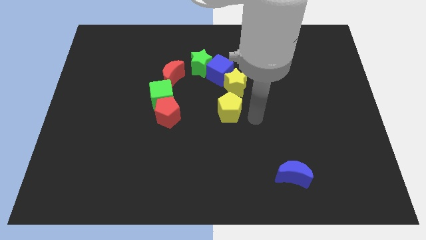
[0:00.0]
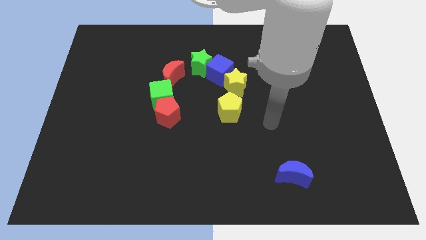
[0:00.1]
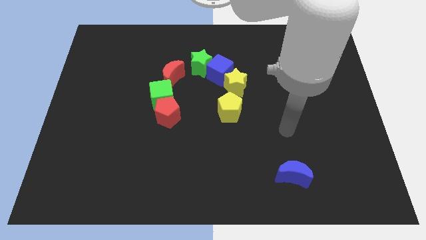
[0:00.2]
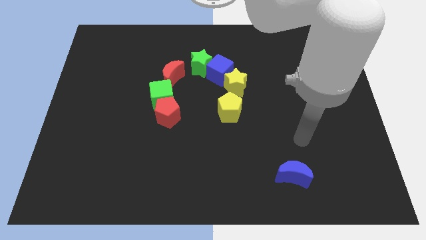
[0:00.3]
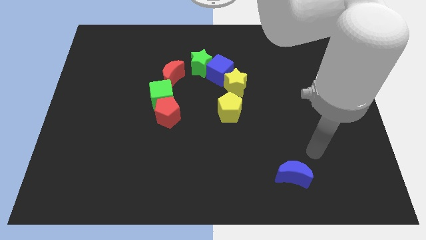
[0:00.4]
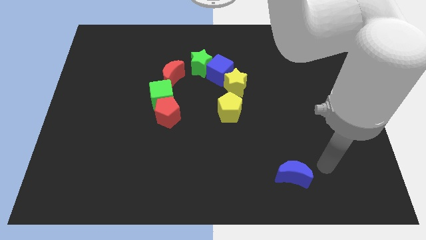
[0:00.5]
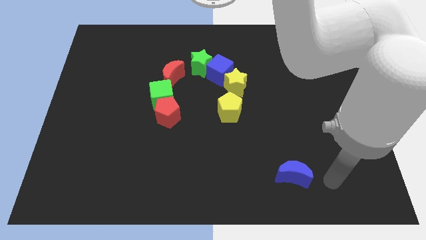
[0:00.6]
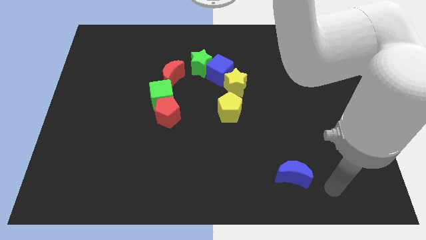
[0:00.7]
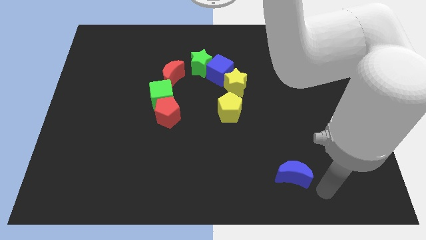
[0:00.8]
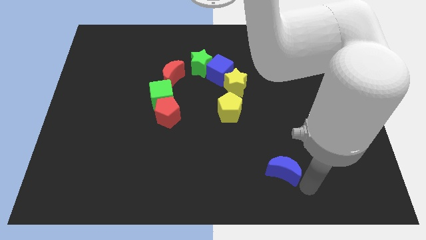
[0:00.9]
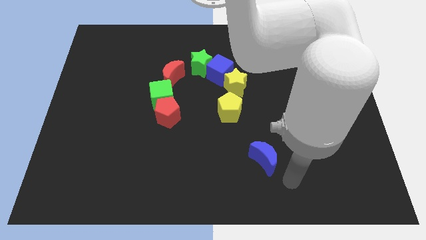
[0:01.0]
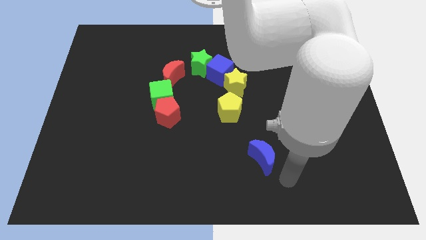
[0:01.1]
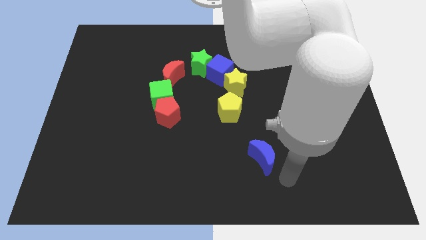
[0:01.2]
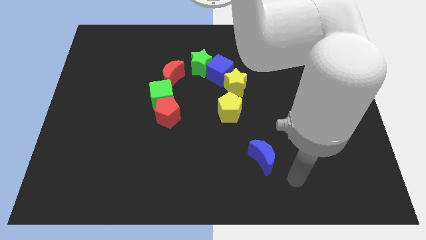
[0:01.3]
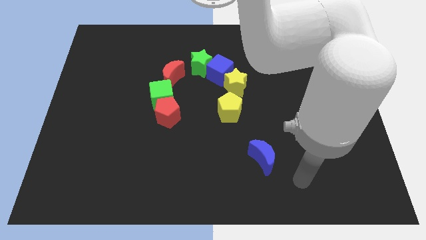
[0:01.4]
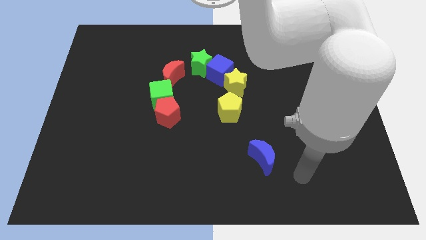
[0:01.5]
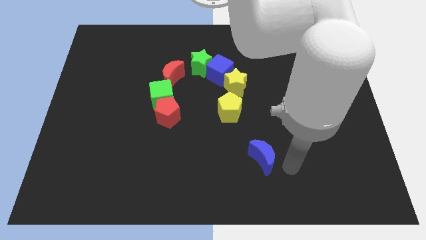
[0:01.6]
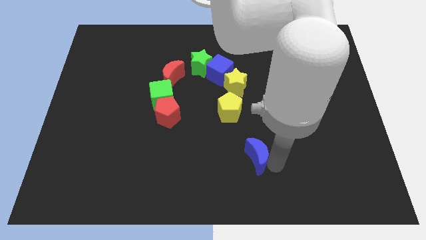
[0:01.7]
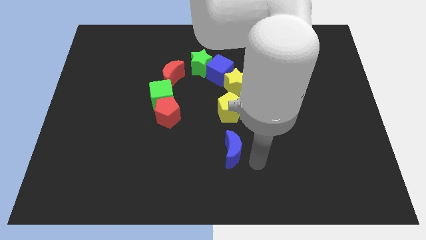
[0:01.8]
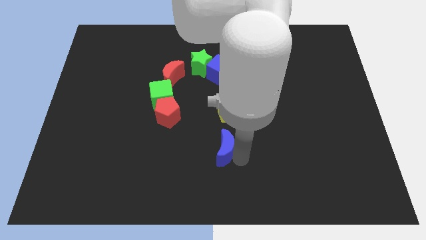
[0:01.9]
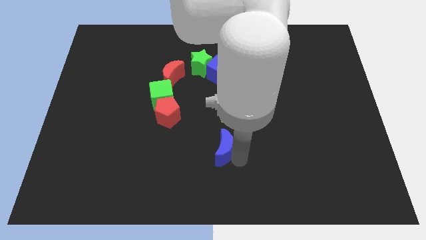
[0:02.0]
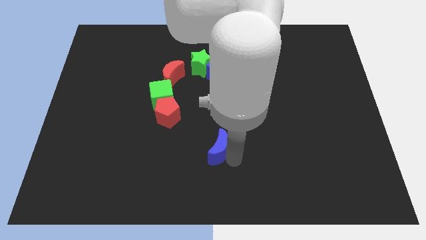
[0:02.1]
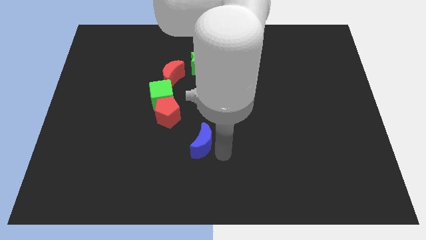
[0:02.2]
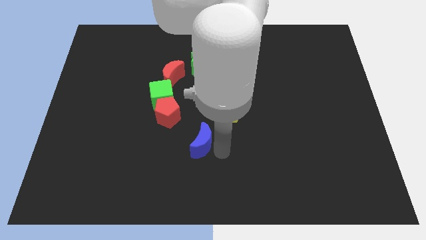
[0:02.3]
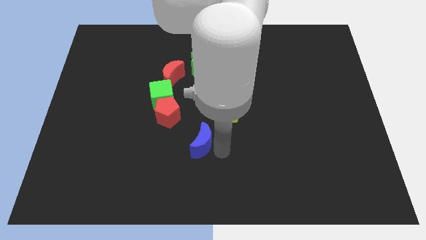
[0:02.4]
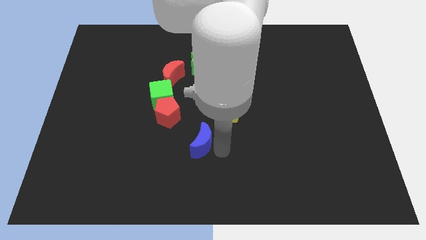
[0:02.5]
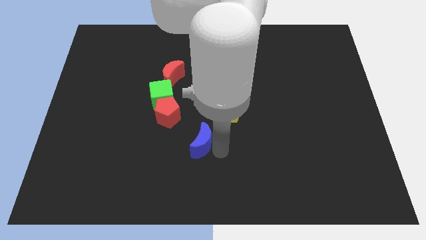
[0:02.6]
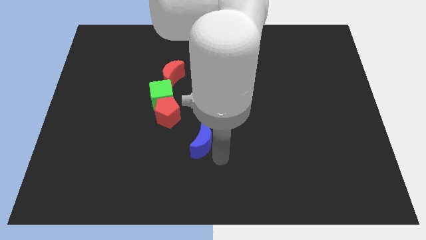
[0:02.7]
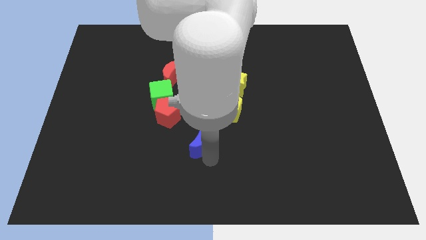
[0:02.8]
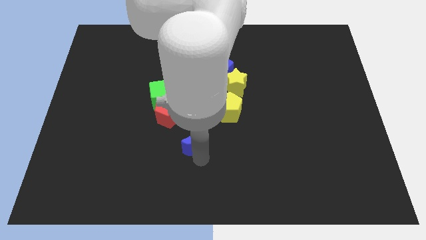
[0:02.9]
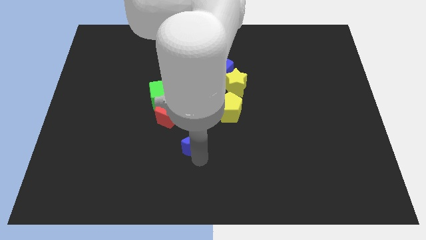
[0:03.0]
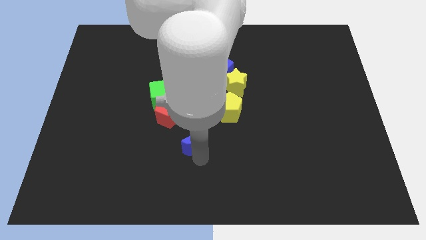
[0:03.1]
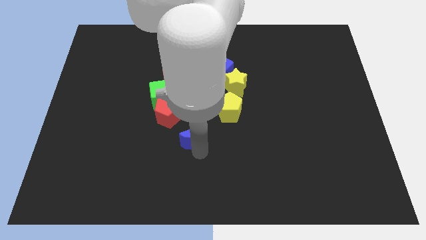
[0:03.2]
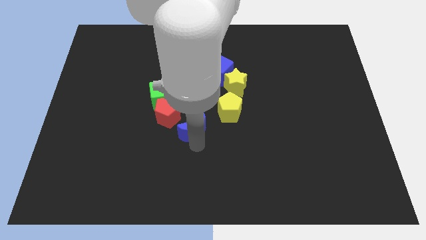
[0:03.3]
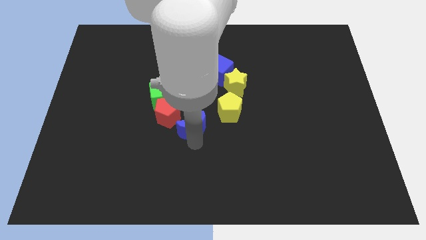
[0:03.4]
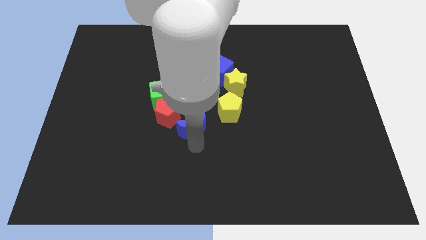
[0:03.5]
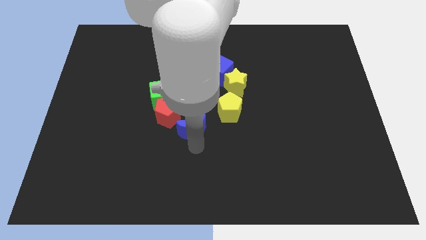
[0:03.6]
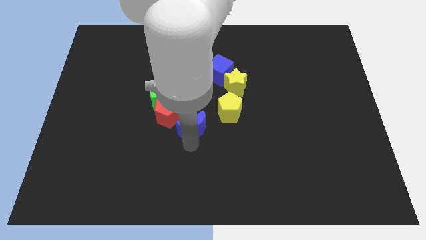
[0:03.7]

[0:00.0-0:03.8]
push the blue crescent to the right of the red pentagon

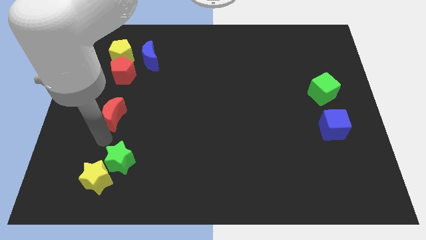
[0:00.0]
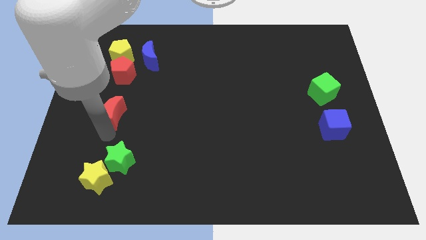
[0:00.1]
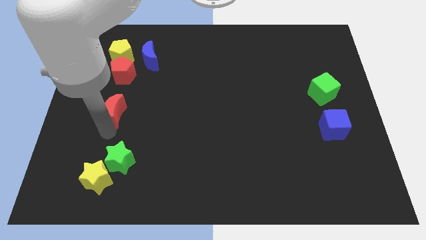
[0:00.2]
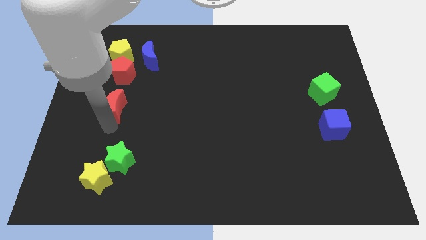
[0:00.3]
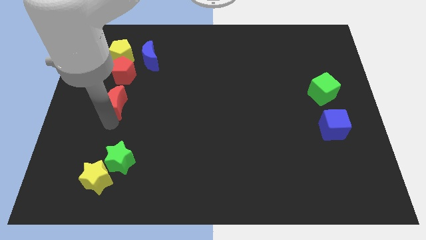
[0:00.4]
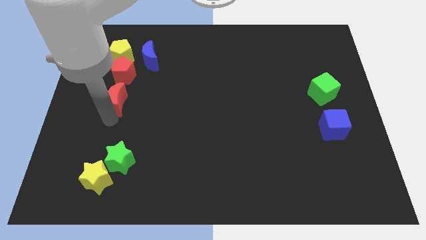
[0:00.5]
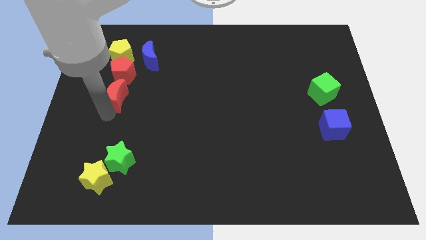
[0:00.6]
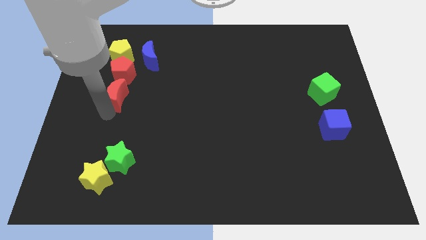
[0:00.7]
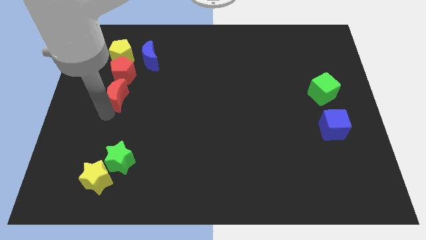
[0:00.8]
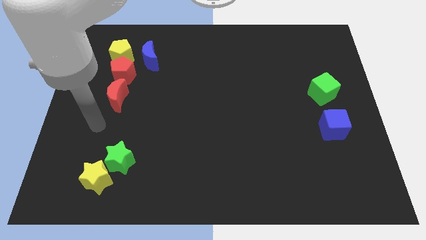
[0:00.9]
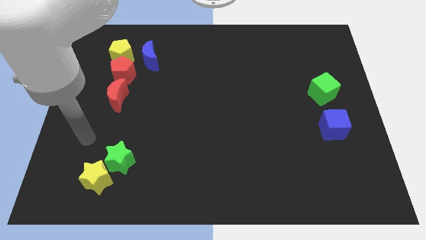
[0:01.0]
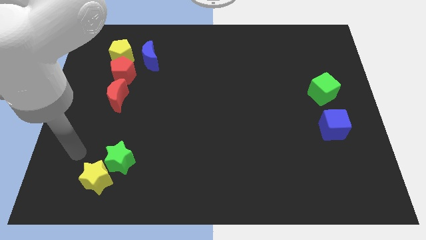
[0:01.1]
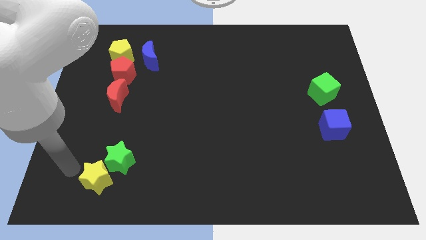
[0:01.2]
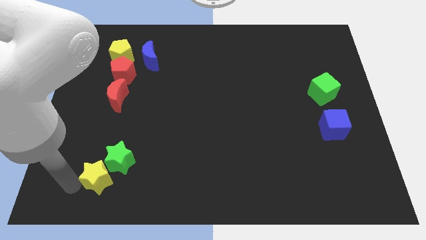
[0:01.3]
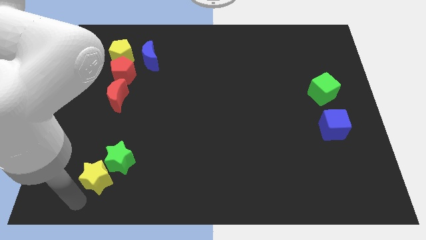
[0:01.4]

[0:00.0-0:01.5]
place red moon below the red pentagon

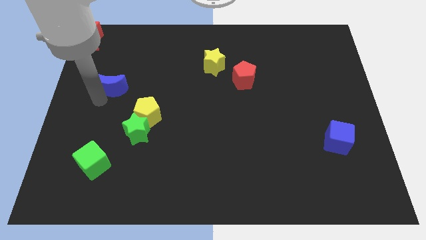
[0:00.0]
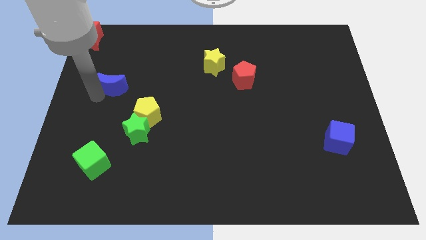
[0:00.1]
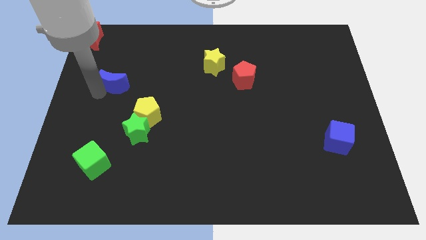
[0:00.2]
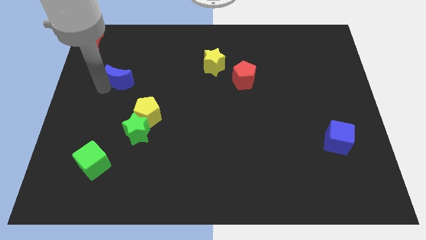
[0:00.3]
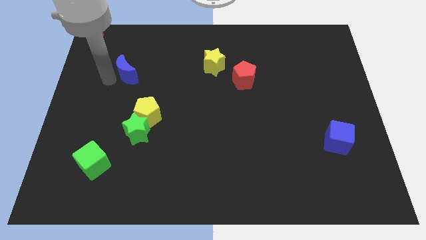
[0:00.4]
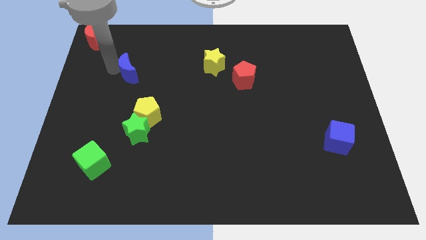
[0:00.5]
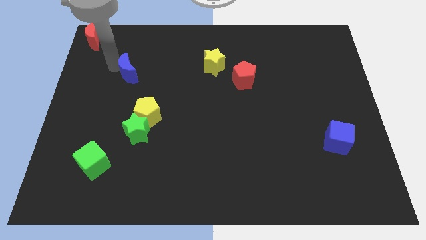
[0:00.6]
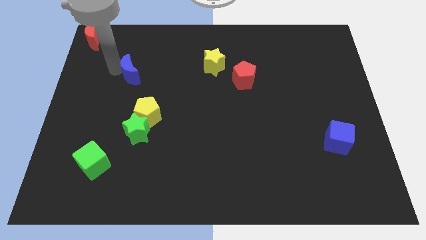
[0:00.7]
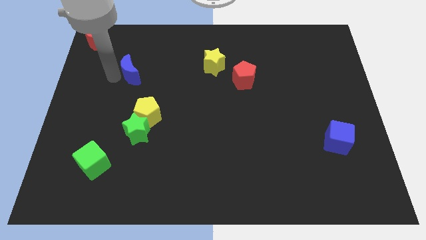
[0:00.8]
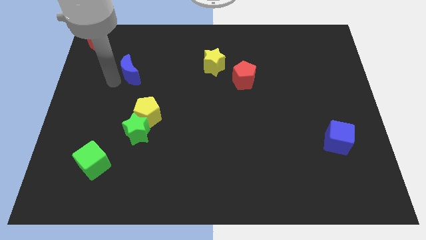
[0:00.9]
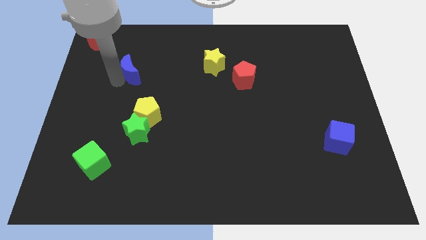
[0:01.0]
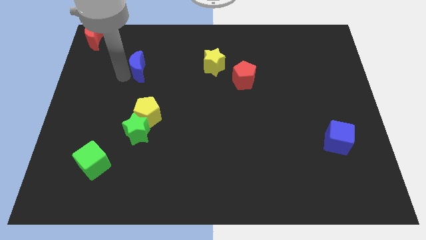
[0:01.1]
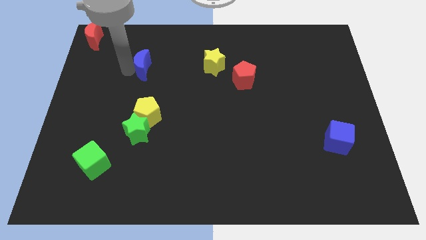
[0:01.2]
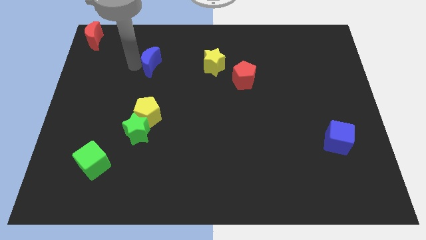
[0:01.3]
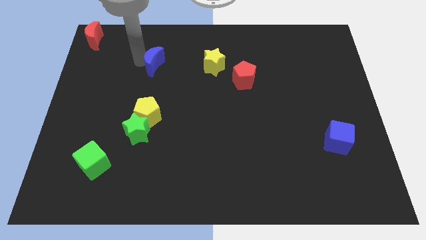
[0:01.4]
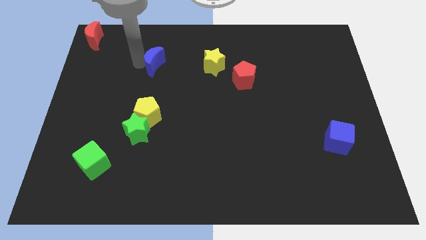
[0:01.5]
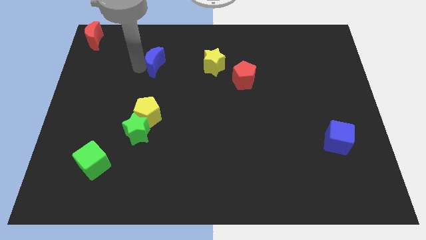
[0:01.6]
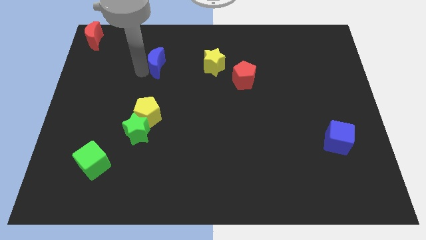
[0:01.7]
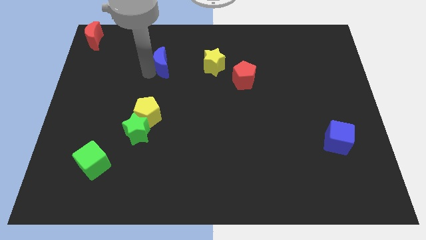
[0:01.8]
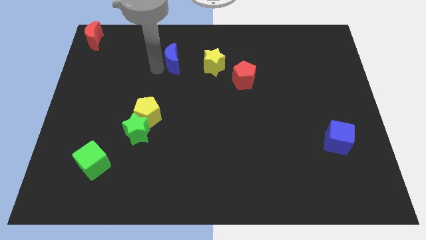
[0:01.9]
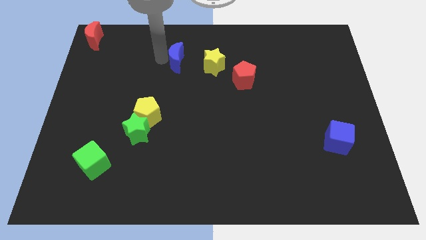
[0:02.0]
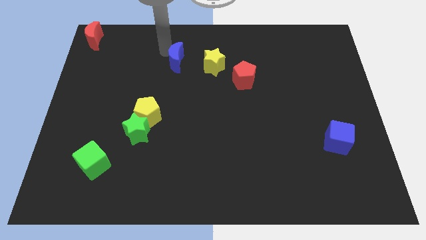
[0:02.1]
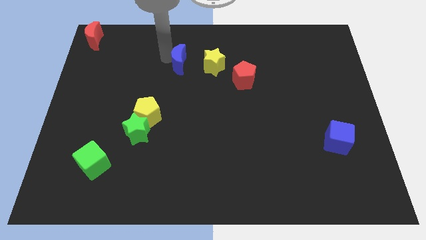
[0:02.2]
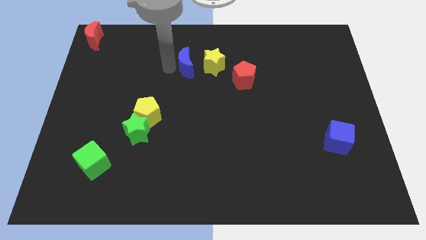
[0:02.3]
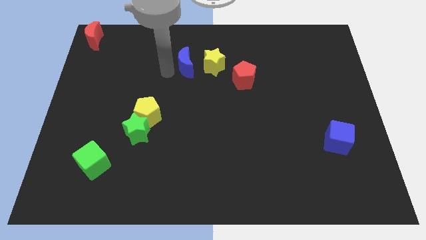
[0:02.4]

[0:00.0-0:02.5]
move the blue crescent to the left side of the yellow star

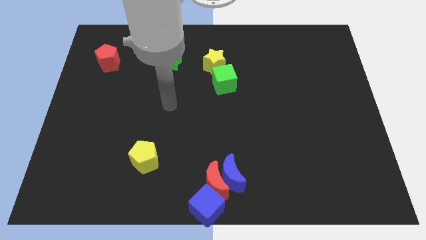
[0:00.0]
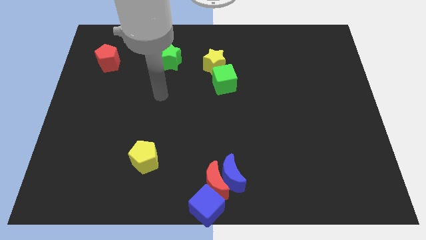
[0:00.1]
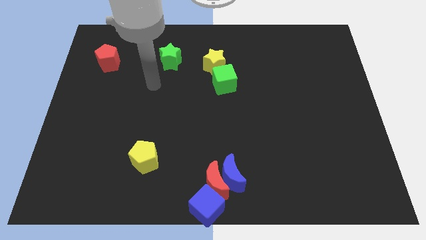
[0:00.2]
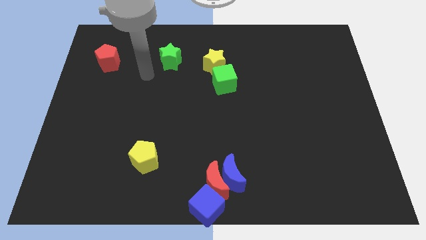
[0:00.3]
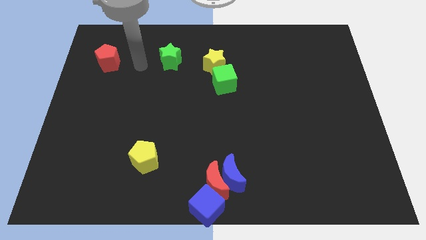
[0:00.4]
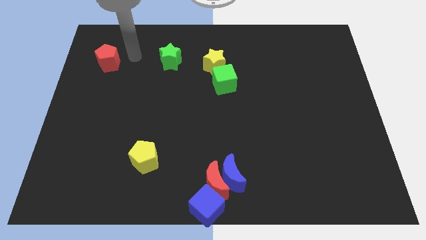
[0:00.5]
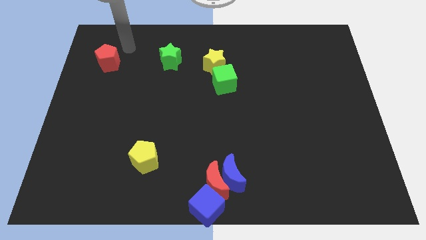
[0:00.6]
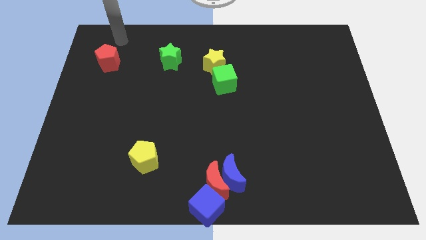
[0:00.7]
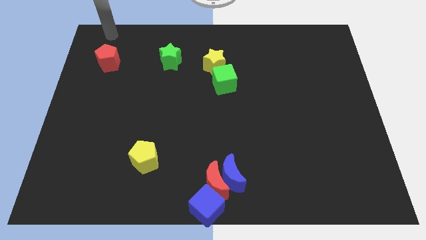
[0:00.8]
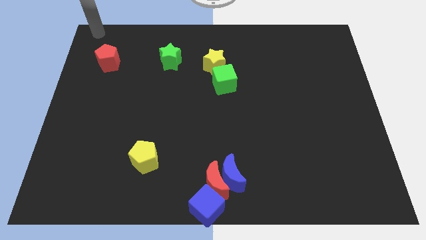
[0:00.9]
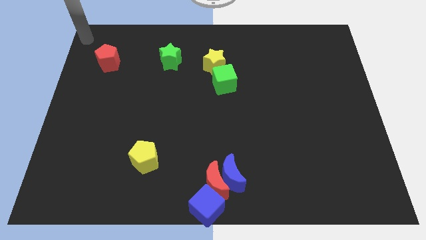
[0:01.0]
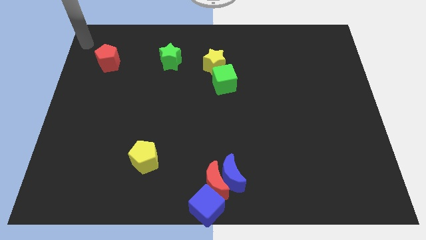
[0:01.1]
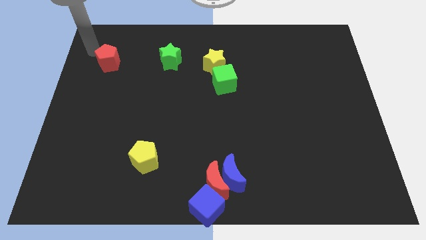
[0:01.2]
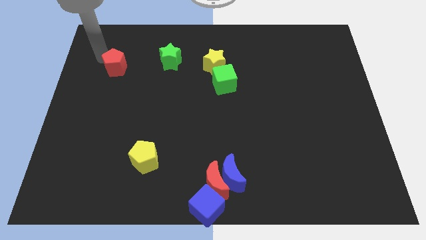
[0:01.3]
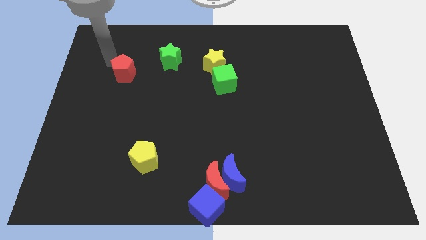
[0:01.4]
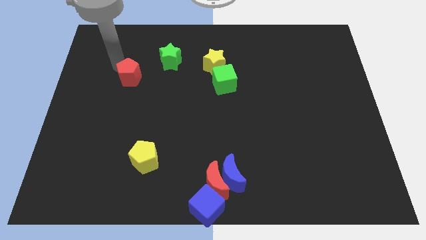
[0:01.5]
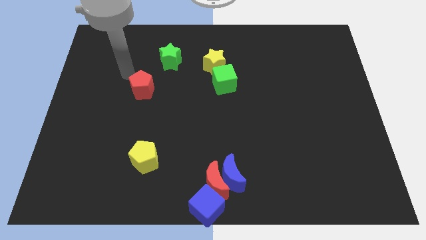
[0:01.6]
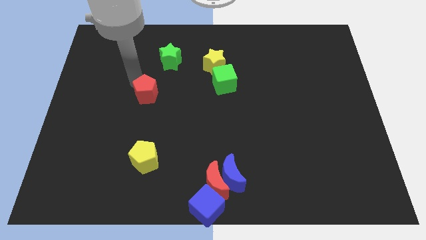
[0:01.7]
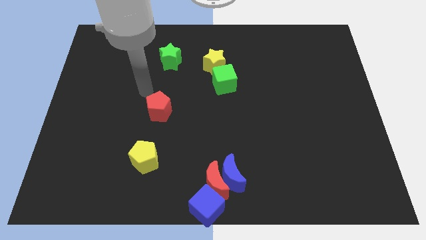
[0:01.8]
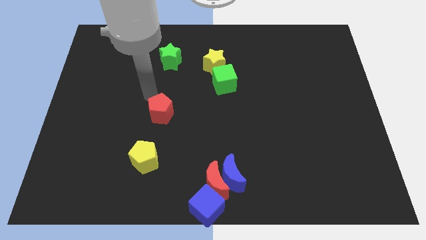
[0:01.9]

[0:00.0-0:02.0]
move the red pentagon above yellow pentagon
